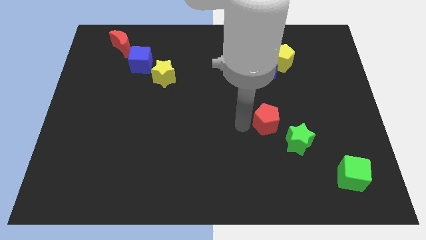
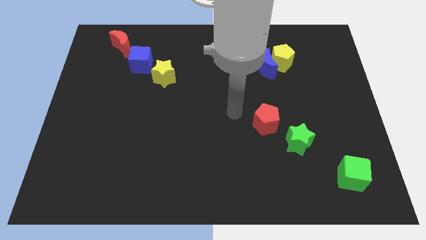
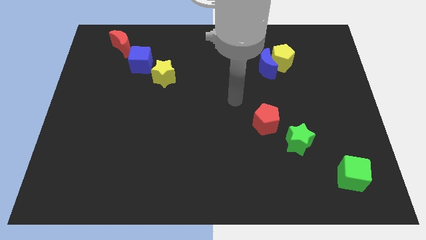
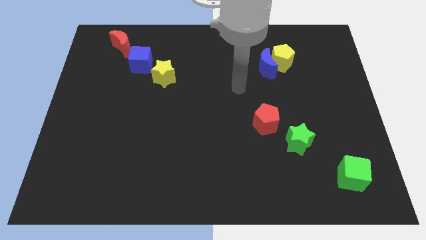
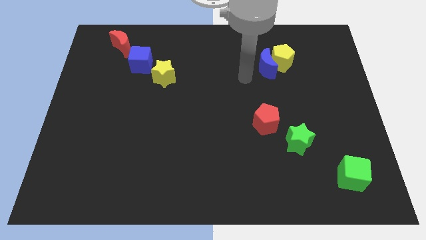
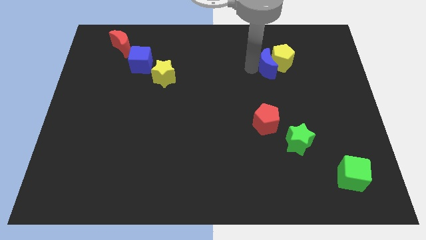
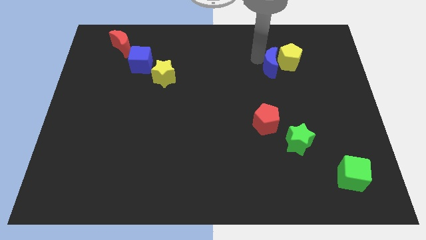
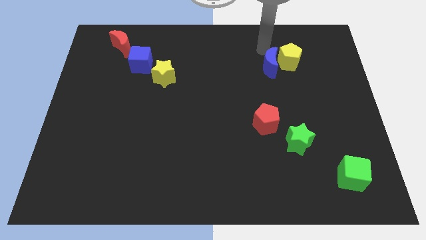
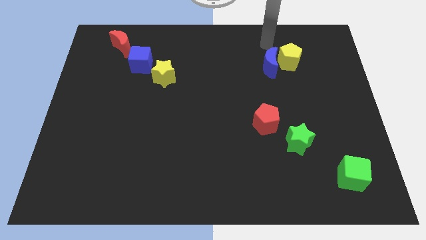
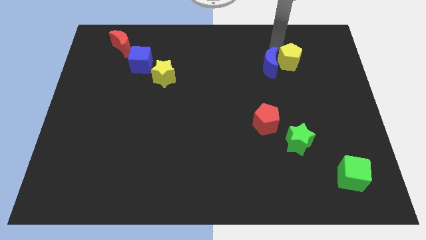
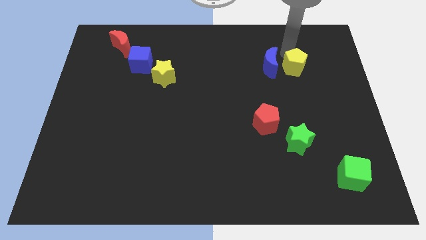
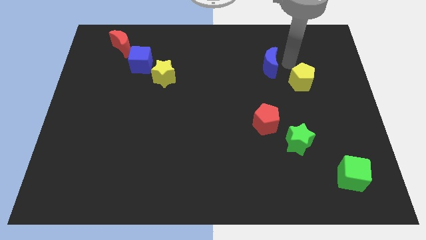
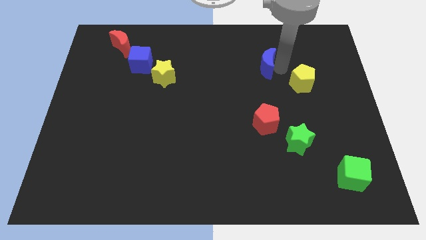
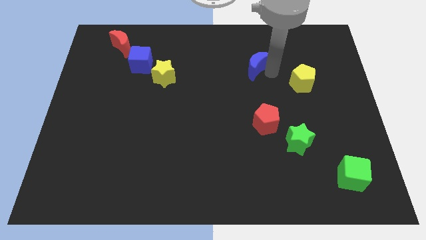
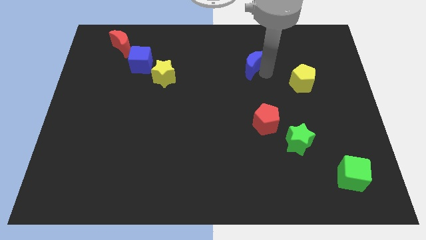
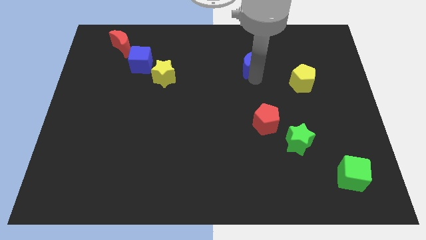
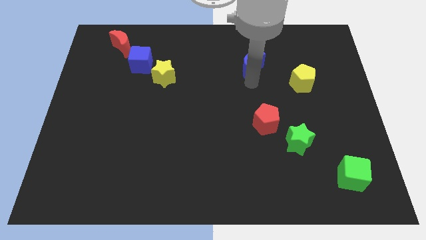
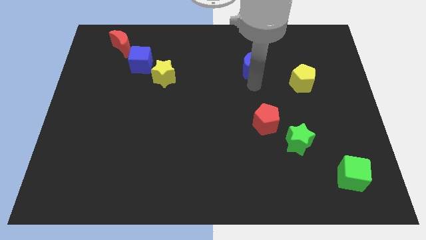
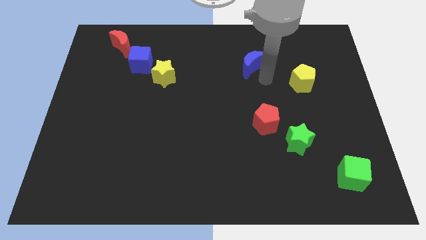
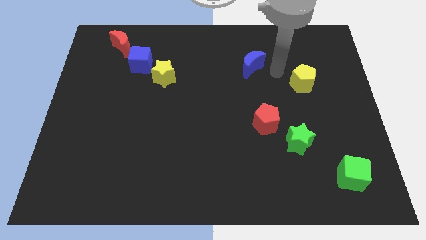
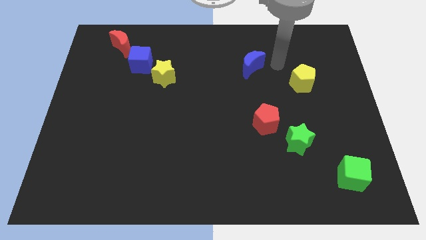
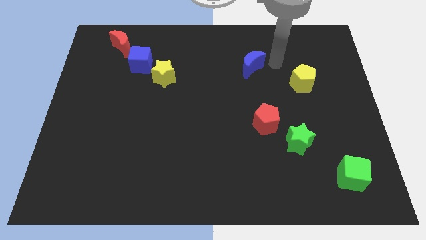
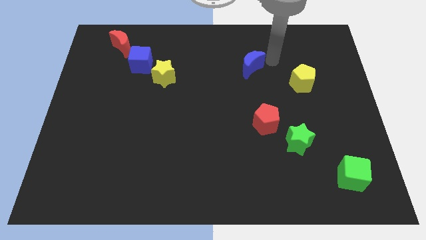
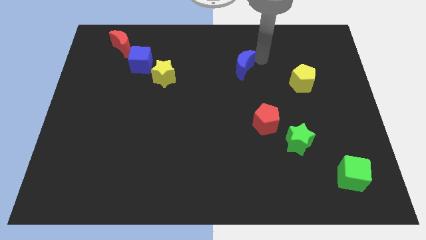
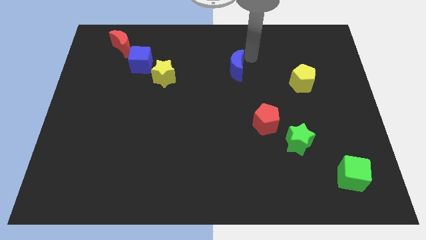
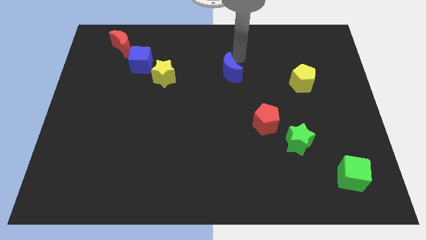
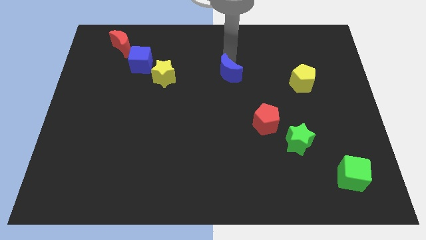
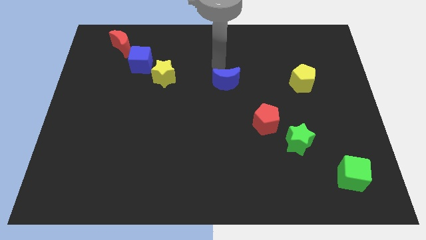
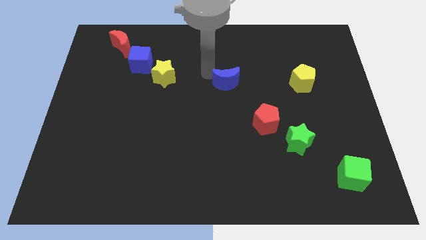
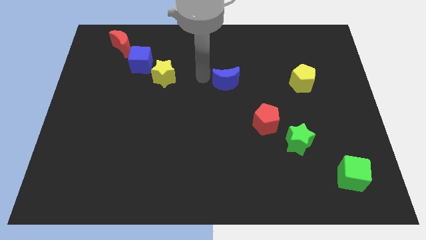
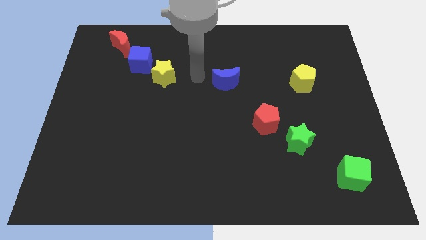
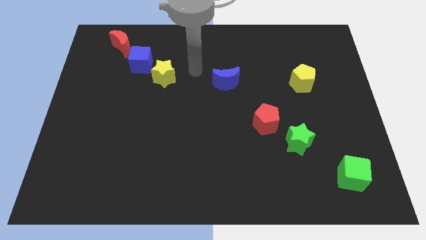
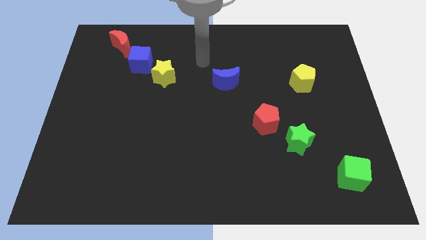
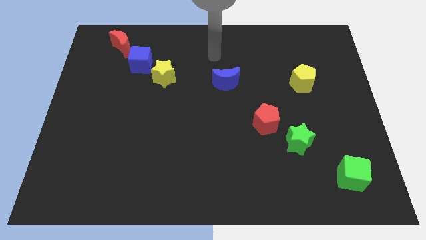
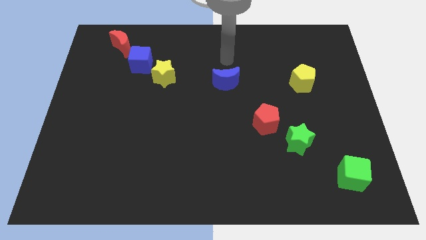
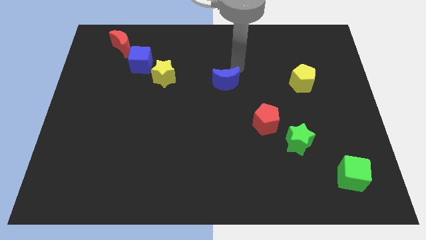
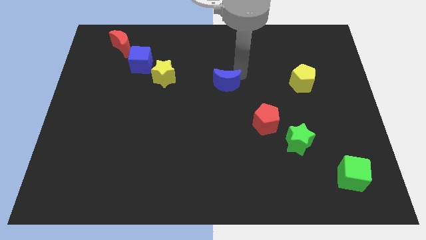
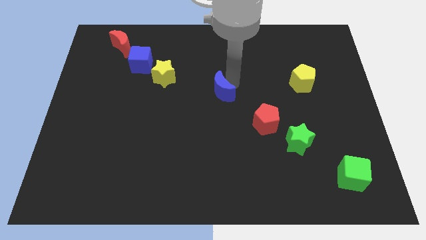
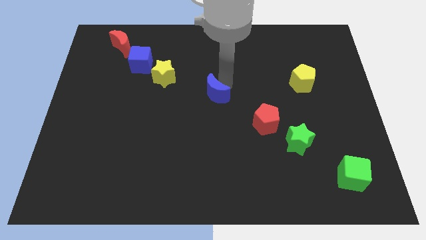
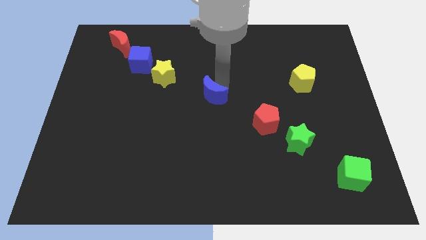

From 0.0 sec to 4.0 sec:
separate the blue moon from the yellow pentagon

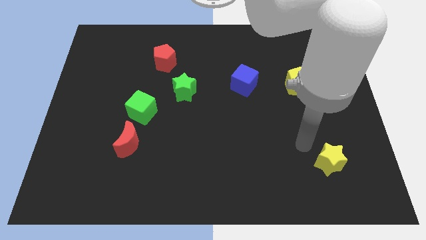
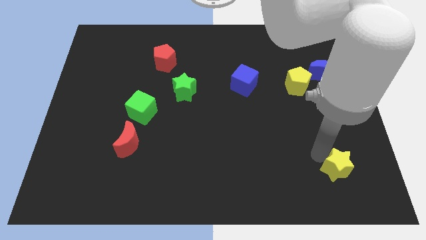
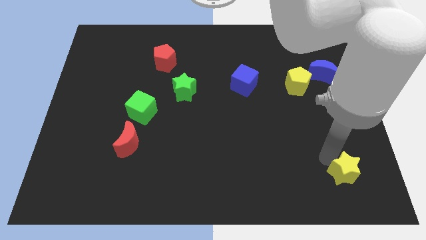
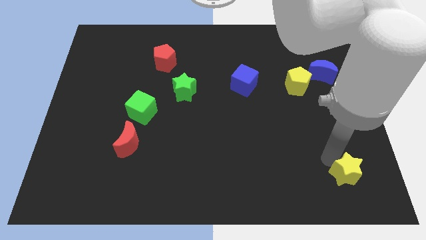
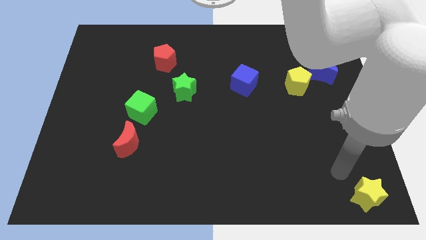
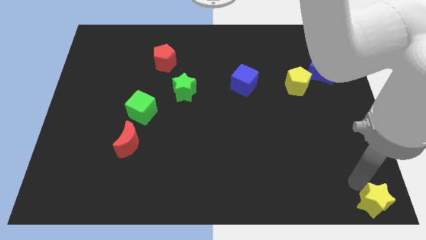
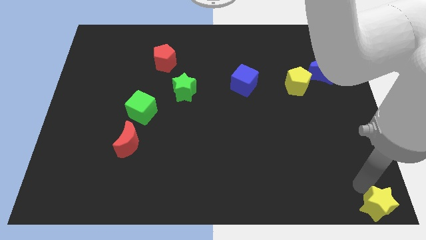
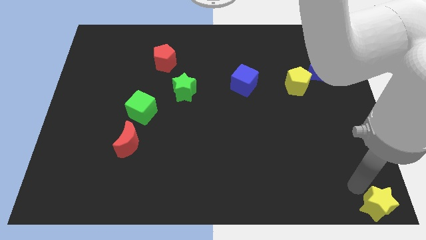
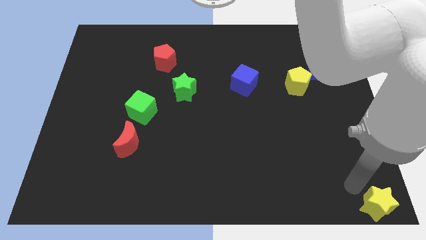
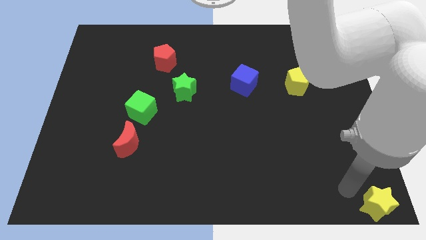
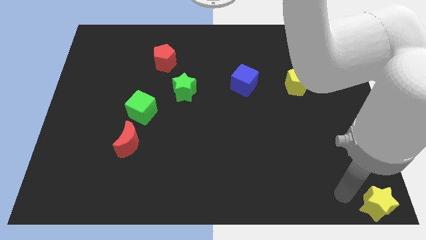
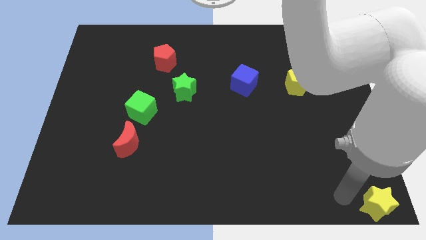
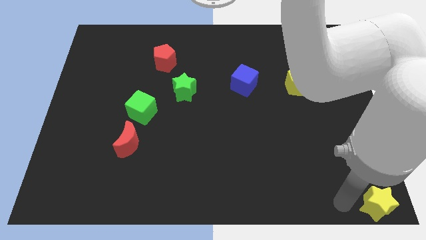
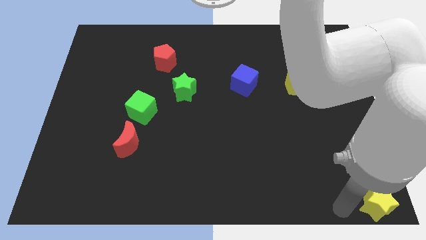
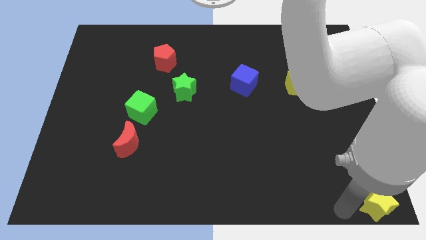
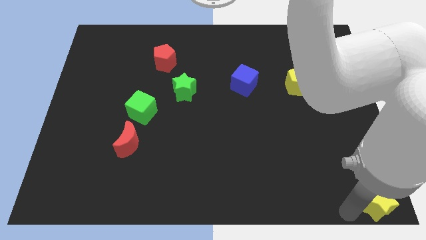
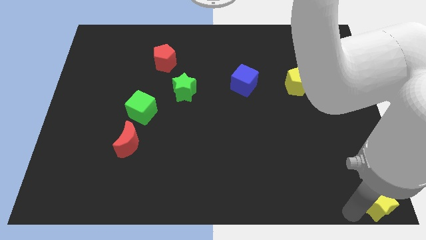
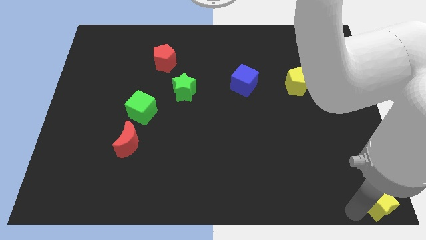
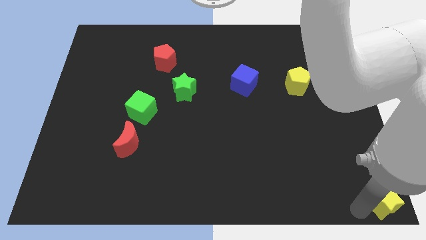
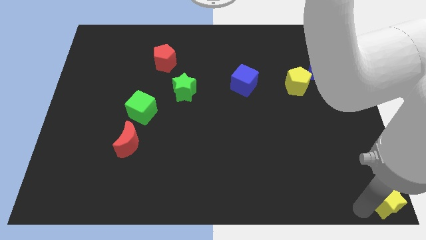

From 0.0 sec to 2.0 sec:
move the yellow star to the bottom right corner of the board

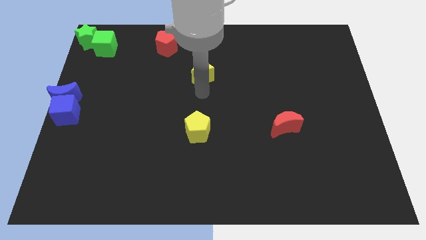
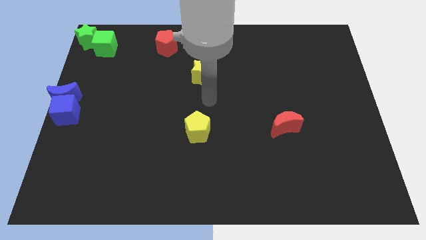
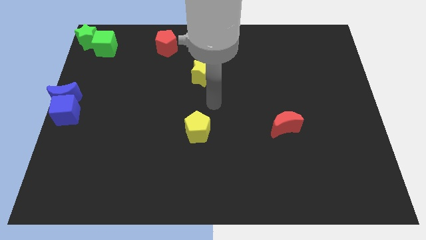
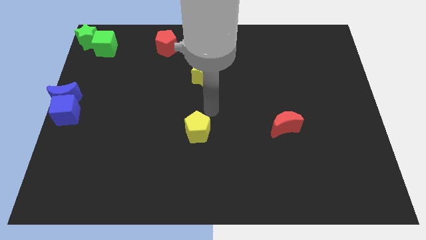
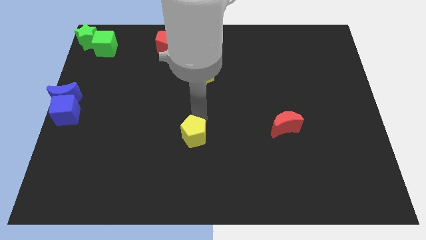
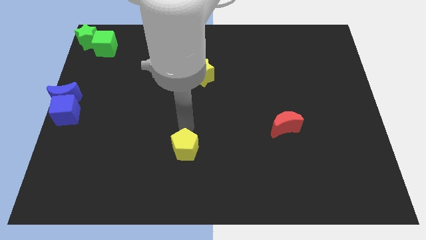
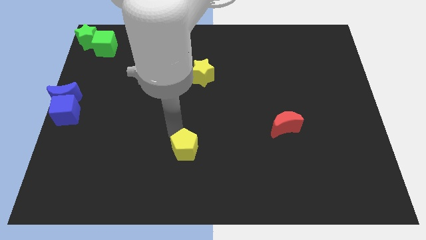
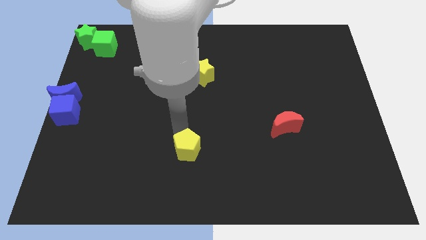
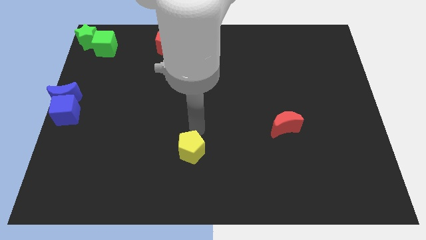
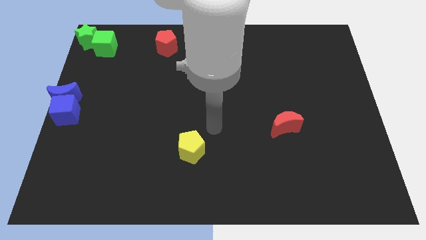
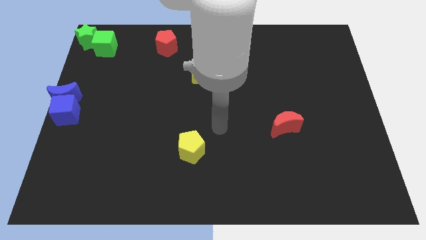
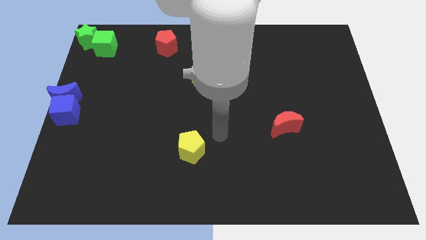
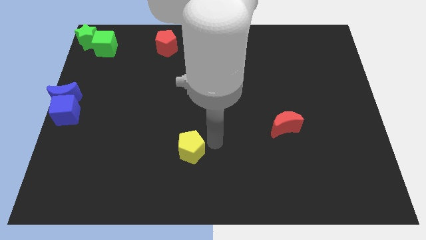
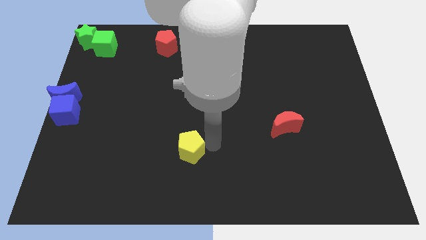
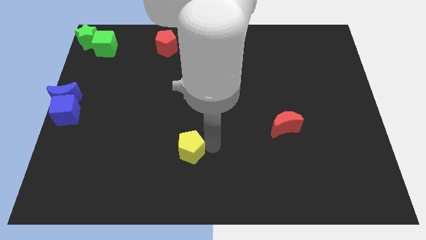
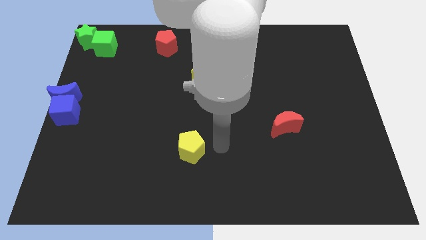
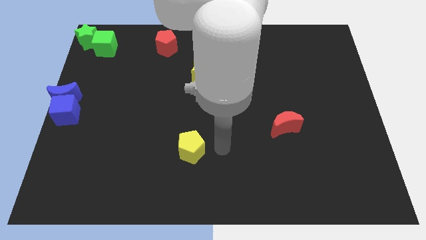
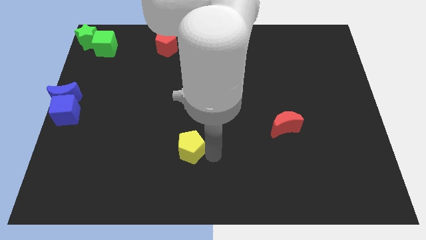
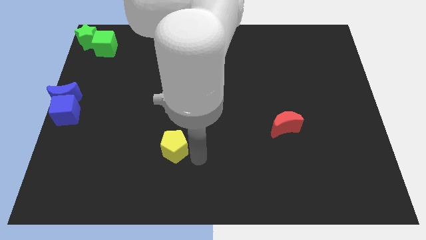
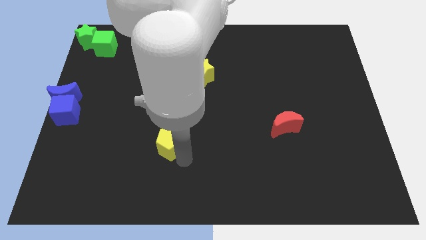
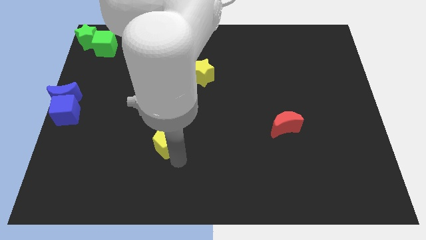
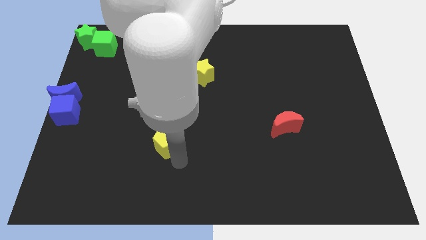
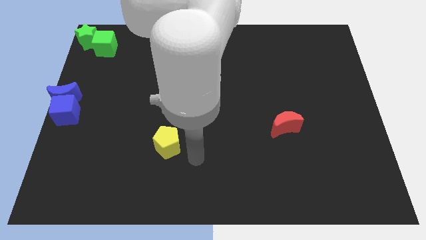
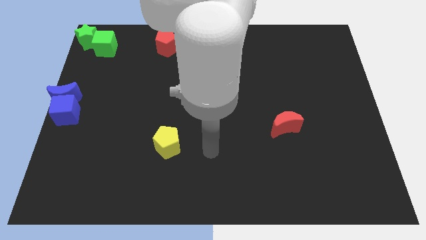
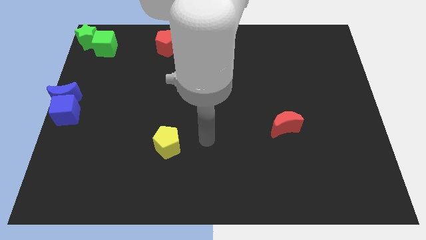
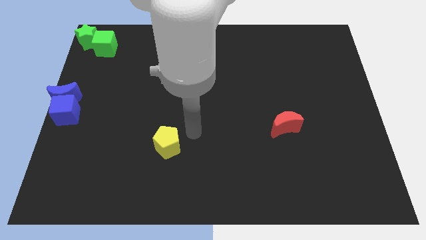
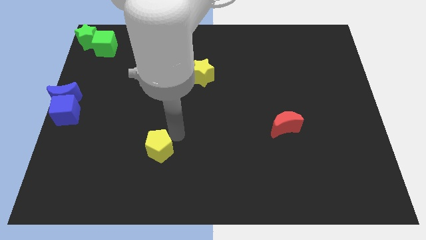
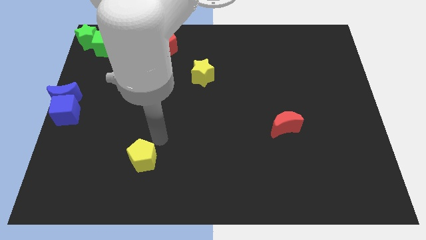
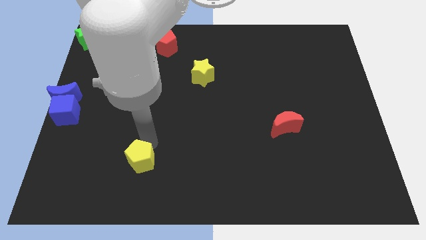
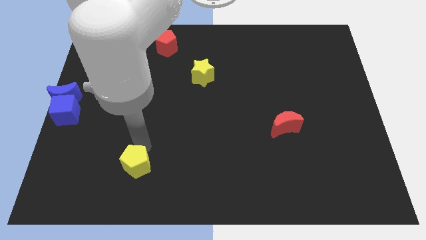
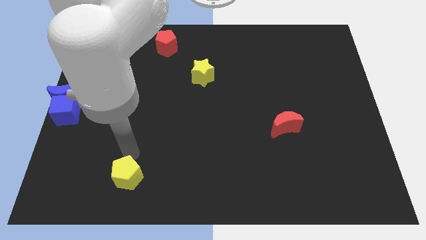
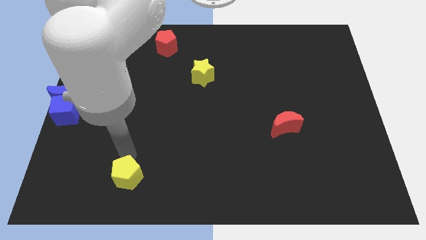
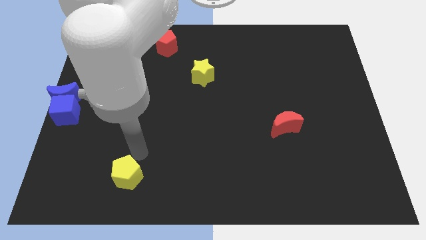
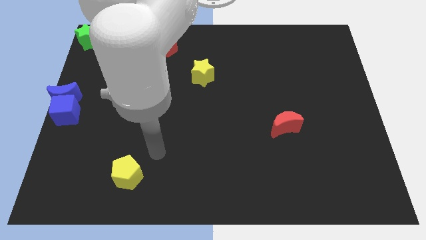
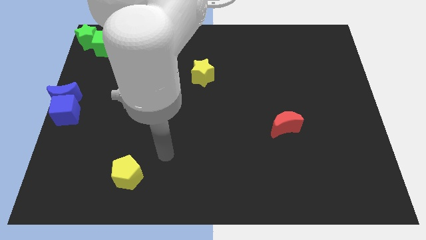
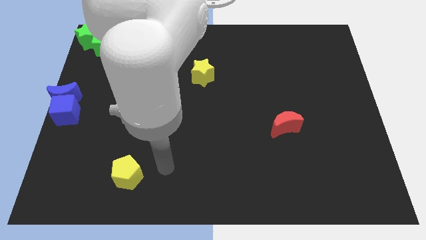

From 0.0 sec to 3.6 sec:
move the yellow pentagon to the bottom right of the blue cube
